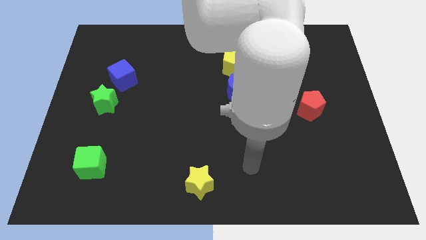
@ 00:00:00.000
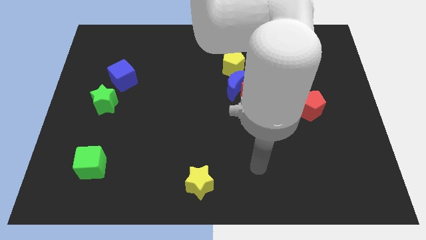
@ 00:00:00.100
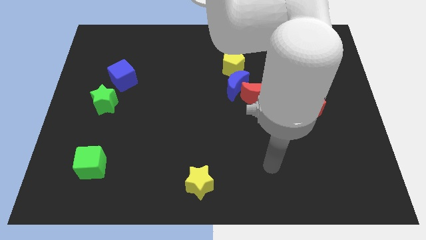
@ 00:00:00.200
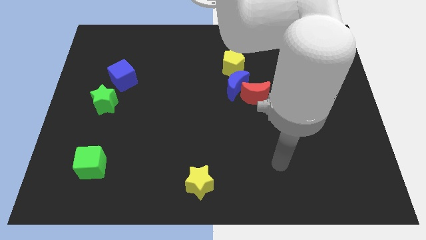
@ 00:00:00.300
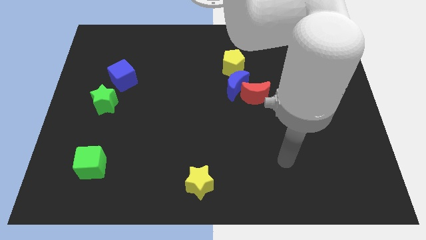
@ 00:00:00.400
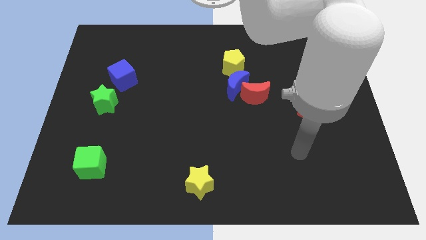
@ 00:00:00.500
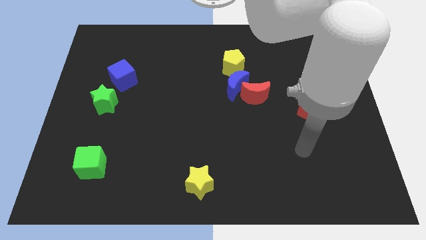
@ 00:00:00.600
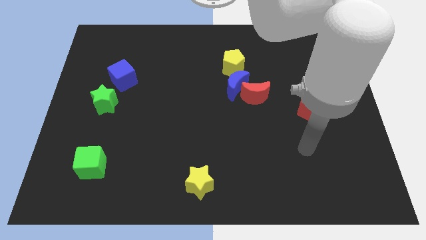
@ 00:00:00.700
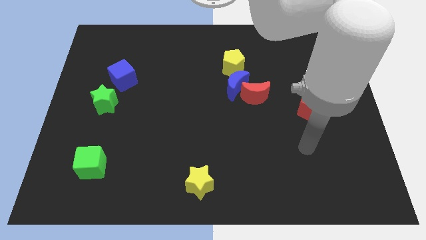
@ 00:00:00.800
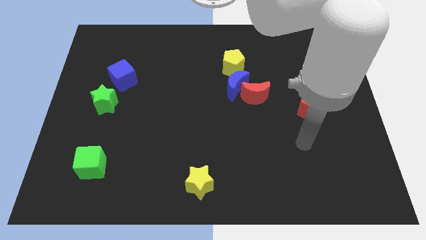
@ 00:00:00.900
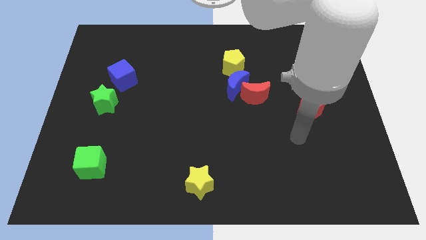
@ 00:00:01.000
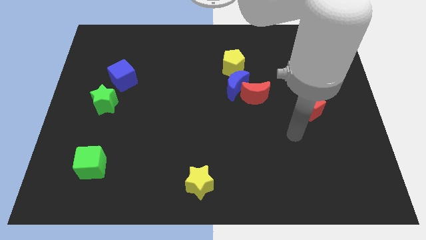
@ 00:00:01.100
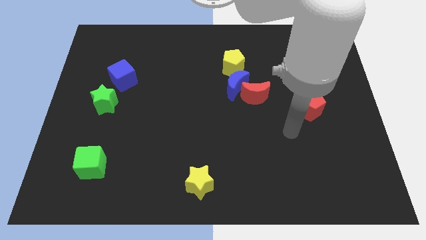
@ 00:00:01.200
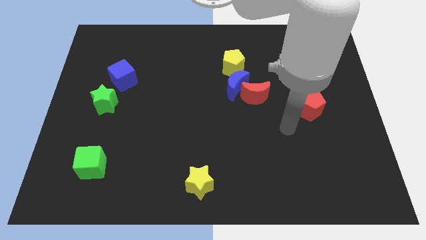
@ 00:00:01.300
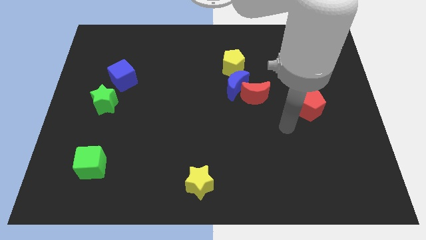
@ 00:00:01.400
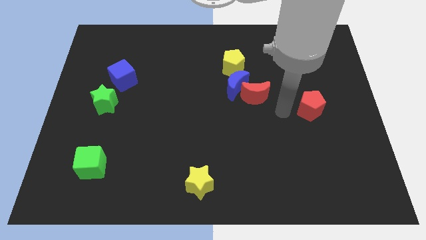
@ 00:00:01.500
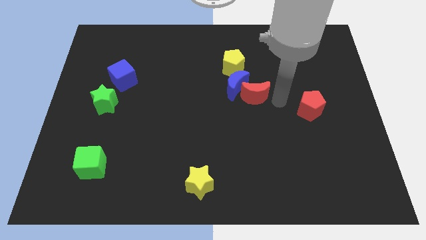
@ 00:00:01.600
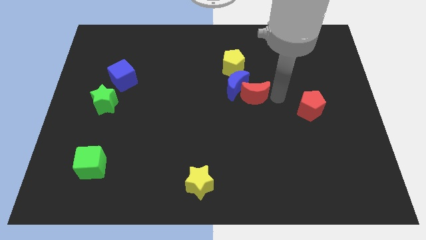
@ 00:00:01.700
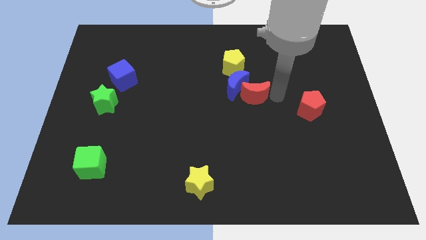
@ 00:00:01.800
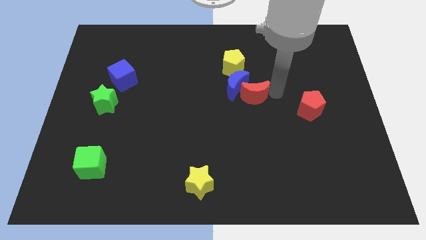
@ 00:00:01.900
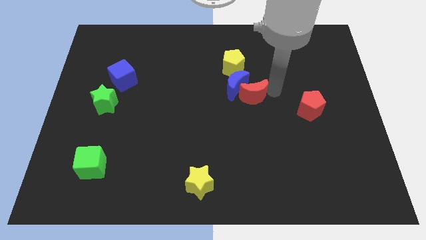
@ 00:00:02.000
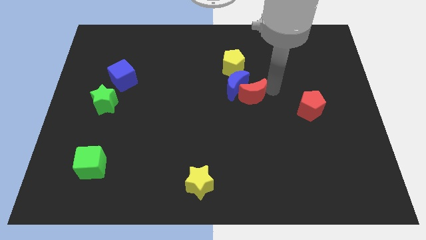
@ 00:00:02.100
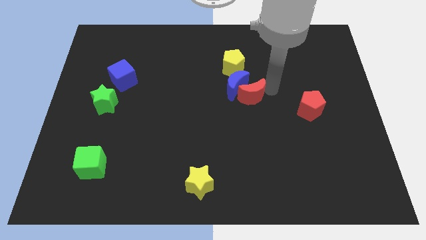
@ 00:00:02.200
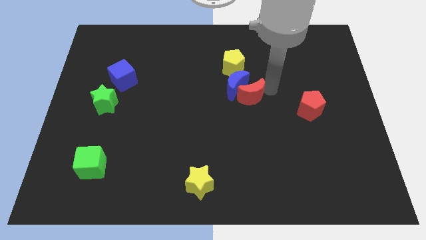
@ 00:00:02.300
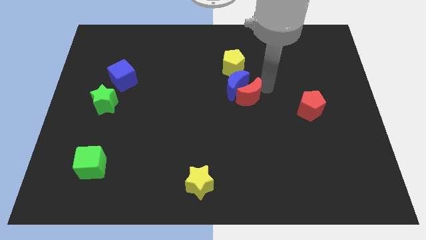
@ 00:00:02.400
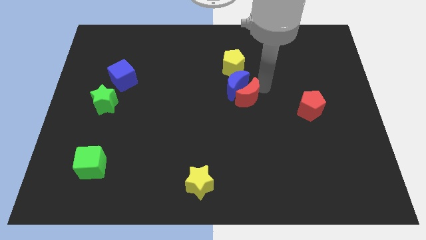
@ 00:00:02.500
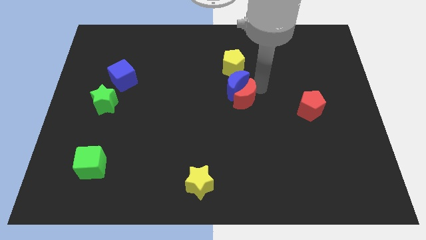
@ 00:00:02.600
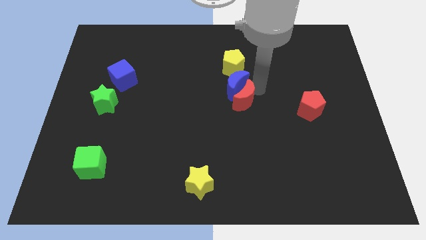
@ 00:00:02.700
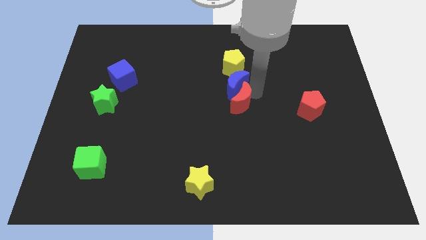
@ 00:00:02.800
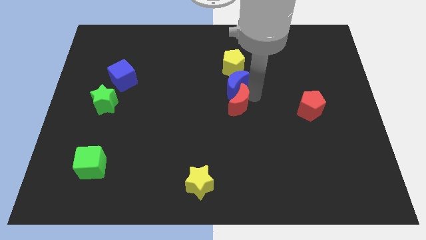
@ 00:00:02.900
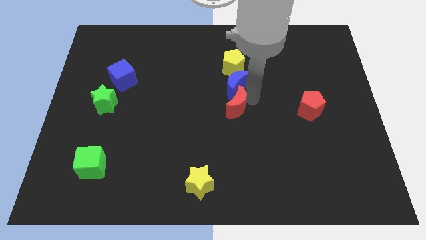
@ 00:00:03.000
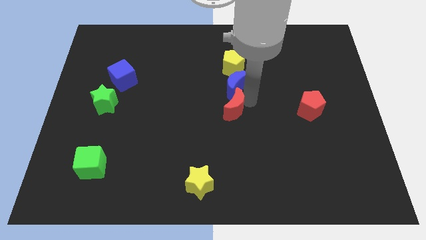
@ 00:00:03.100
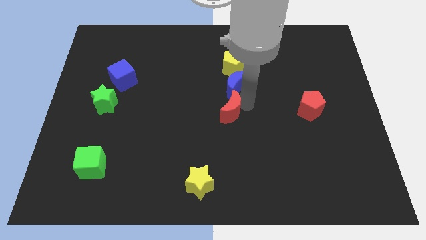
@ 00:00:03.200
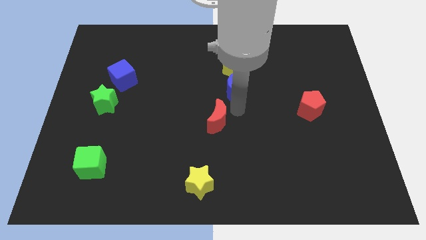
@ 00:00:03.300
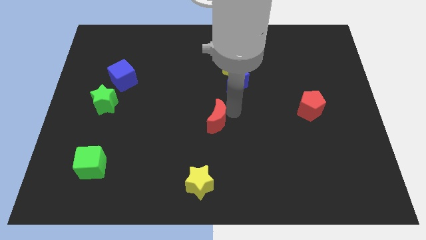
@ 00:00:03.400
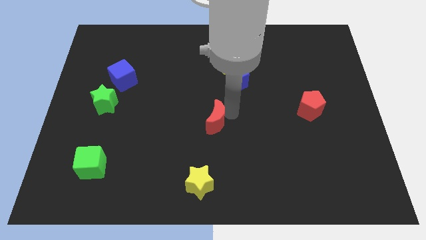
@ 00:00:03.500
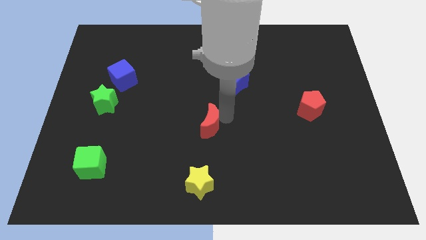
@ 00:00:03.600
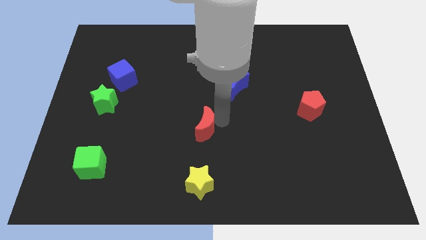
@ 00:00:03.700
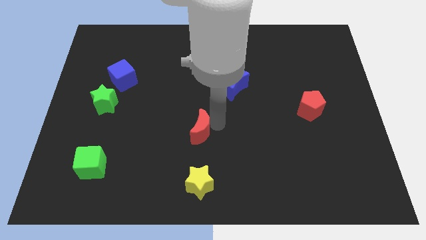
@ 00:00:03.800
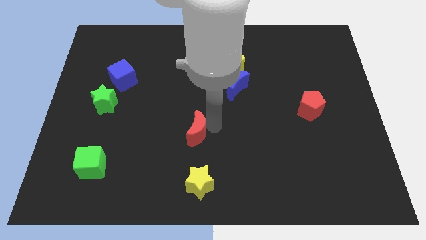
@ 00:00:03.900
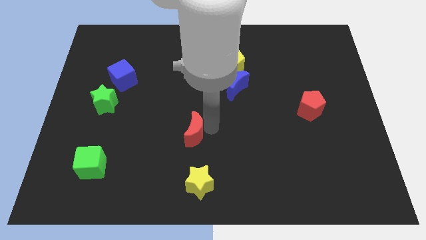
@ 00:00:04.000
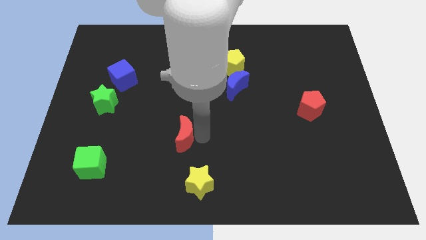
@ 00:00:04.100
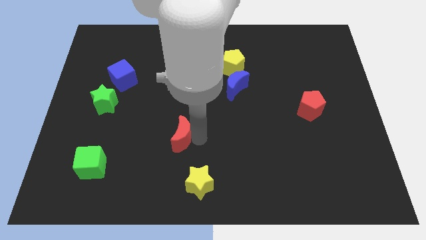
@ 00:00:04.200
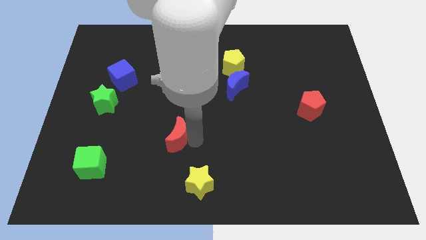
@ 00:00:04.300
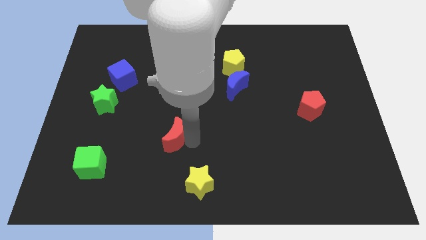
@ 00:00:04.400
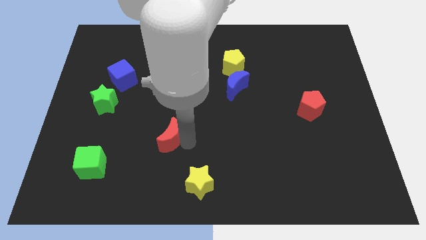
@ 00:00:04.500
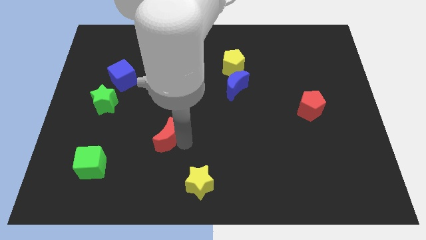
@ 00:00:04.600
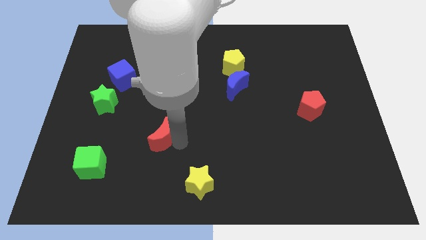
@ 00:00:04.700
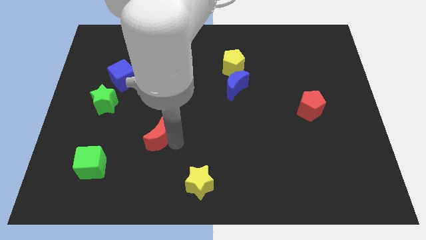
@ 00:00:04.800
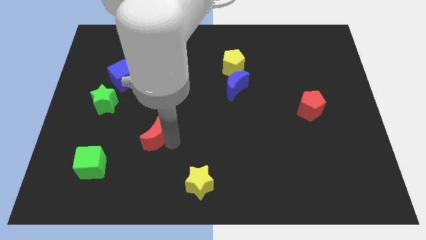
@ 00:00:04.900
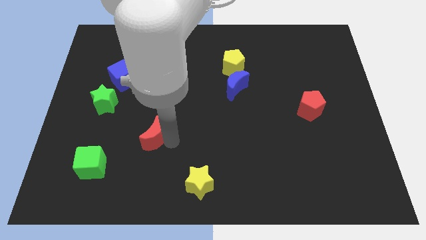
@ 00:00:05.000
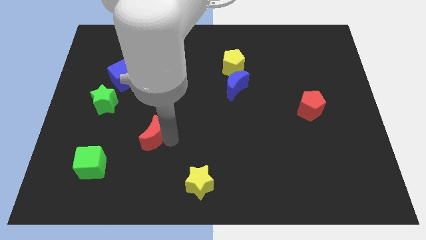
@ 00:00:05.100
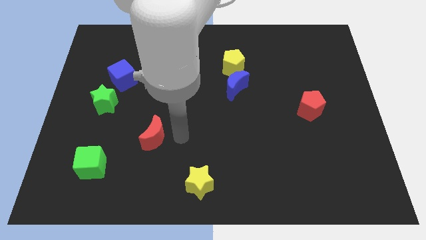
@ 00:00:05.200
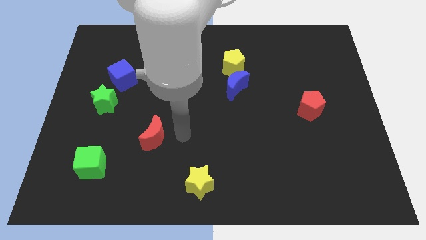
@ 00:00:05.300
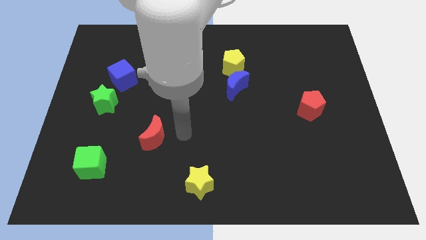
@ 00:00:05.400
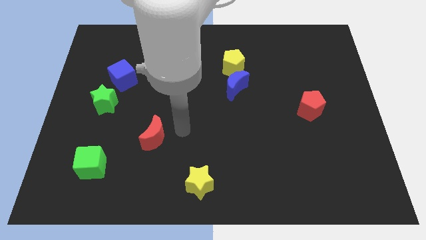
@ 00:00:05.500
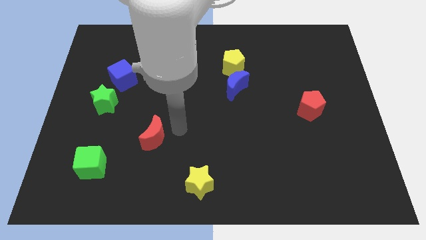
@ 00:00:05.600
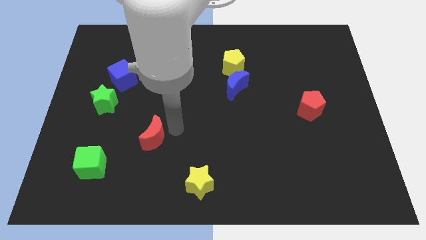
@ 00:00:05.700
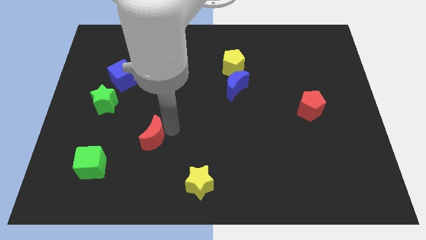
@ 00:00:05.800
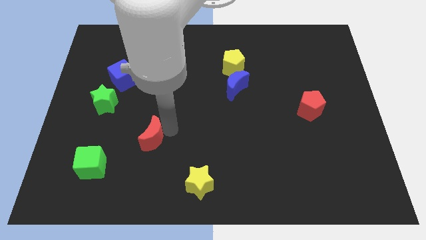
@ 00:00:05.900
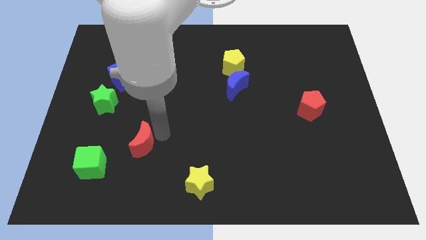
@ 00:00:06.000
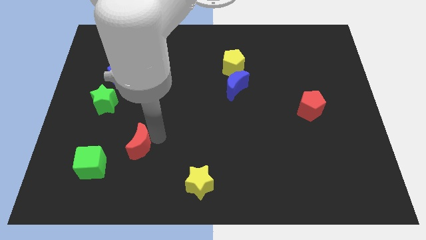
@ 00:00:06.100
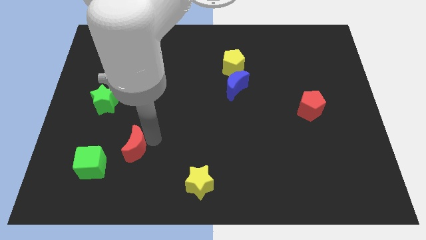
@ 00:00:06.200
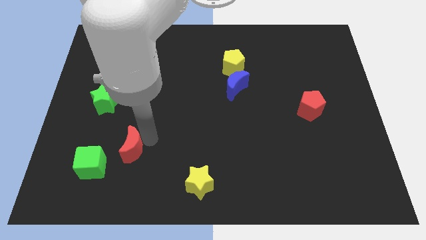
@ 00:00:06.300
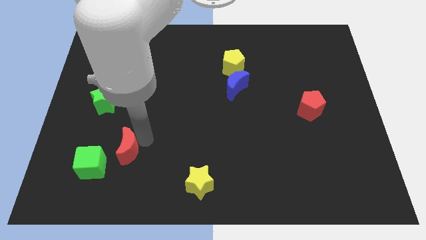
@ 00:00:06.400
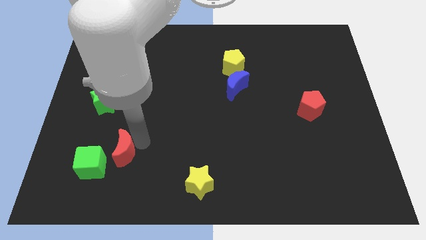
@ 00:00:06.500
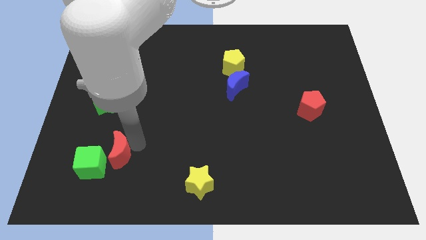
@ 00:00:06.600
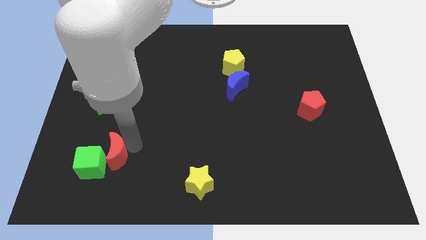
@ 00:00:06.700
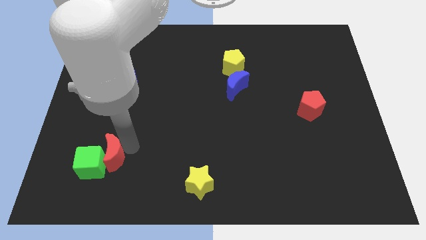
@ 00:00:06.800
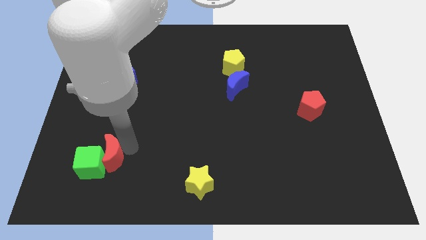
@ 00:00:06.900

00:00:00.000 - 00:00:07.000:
move the red moon close to the green cube

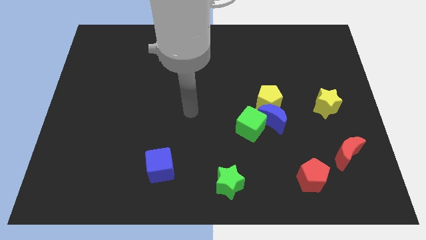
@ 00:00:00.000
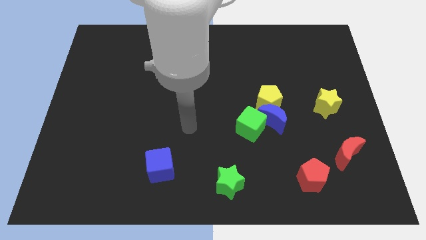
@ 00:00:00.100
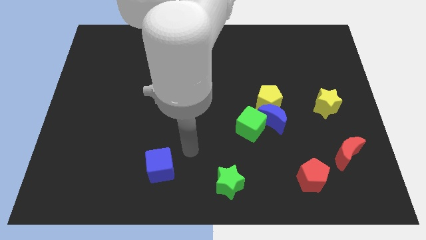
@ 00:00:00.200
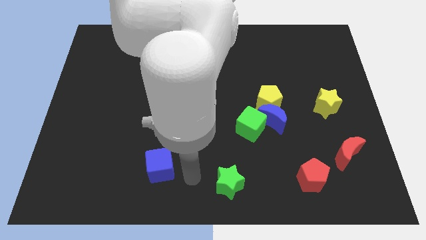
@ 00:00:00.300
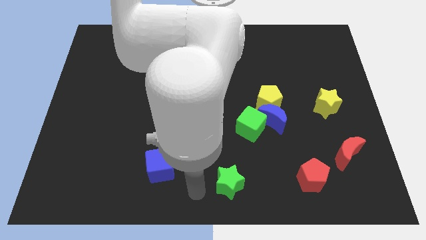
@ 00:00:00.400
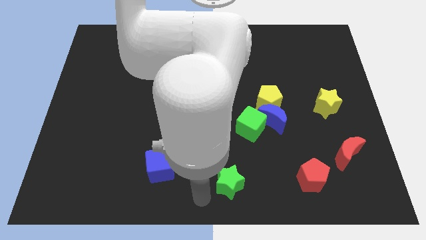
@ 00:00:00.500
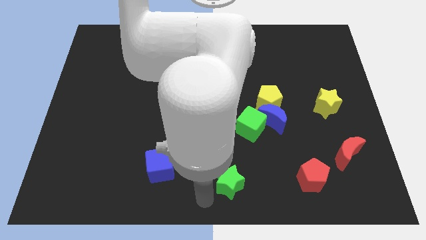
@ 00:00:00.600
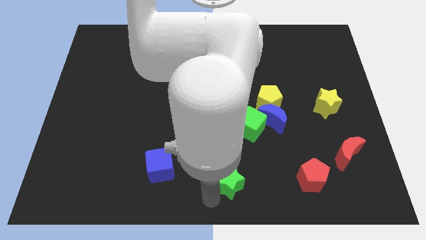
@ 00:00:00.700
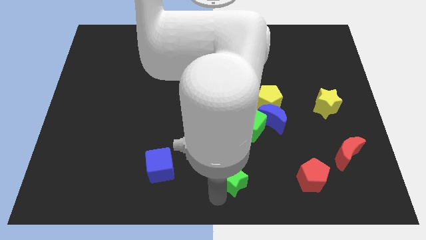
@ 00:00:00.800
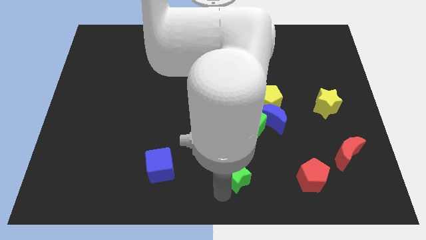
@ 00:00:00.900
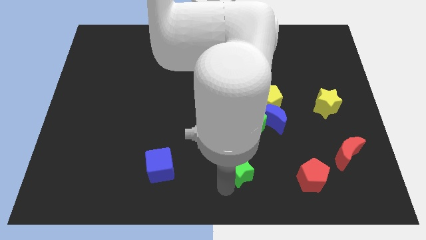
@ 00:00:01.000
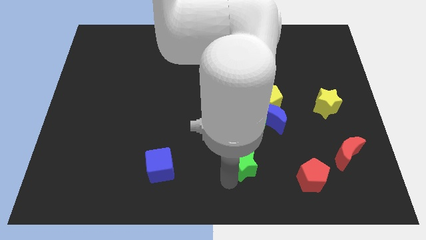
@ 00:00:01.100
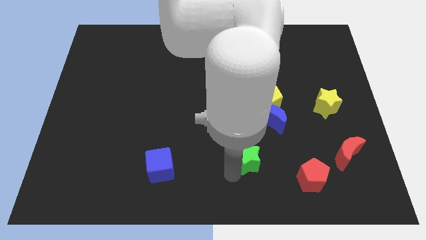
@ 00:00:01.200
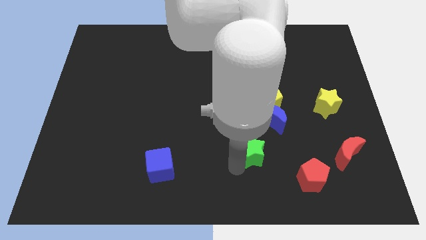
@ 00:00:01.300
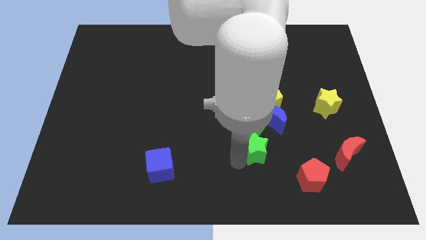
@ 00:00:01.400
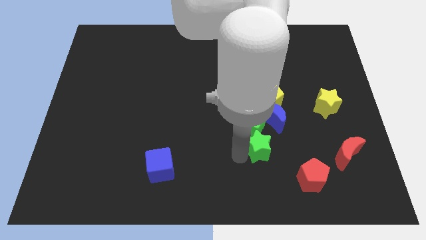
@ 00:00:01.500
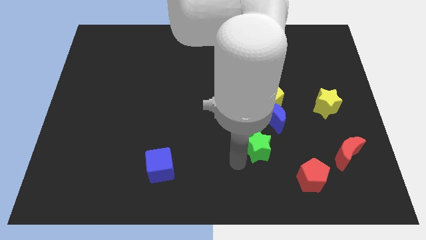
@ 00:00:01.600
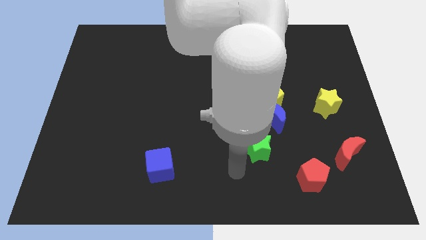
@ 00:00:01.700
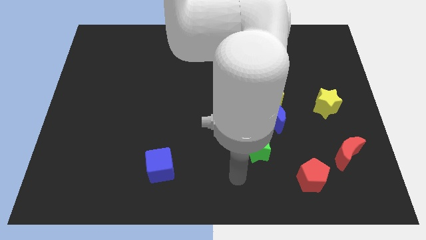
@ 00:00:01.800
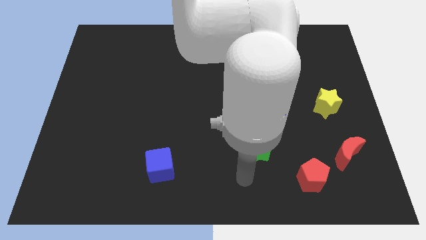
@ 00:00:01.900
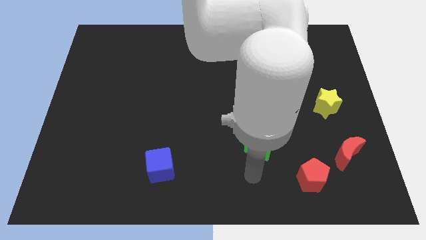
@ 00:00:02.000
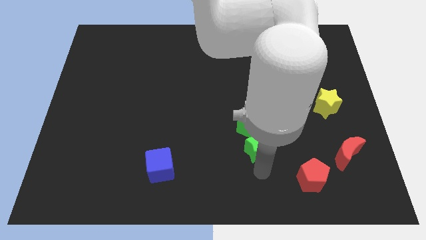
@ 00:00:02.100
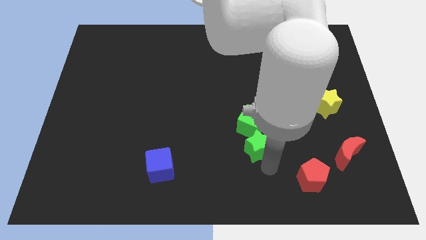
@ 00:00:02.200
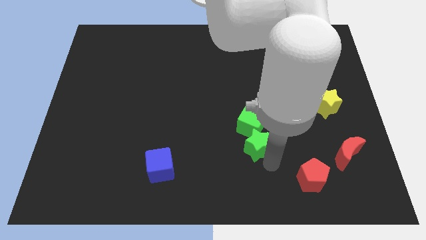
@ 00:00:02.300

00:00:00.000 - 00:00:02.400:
put the green star close to the green cube
